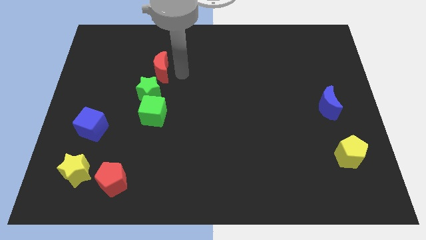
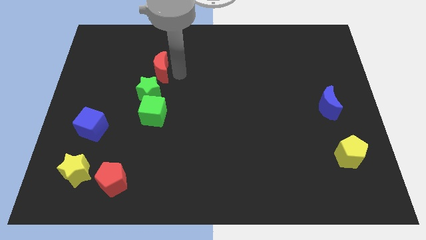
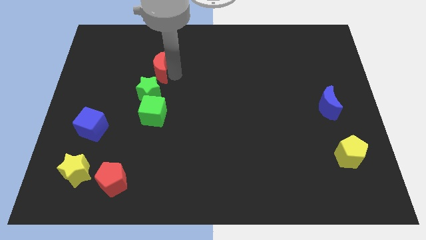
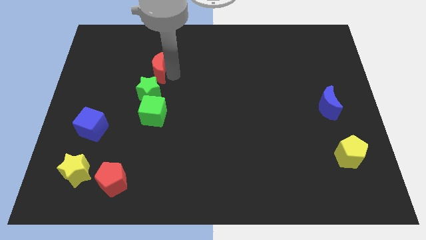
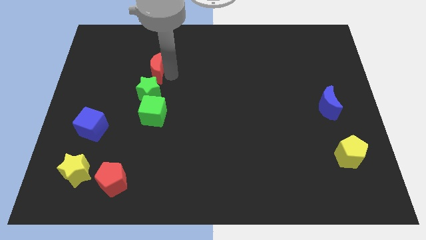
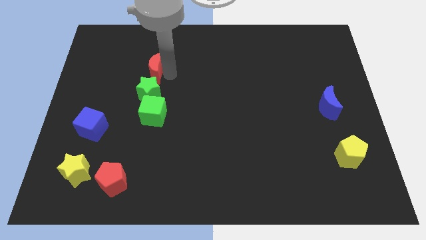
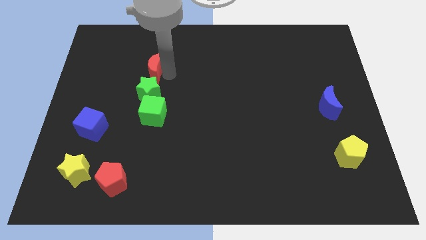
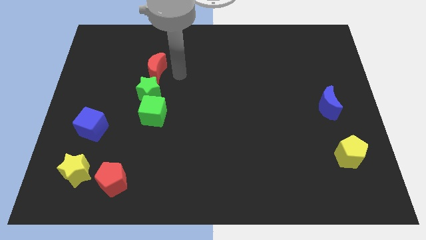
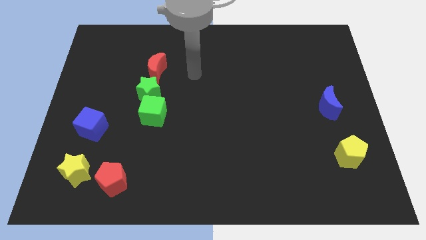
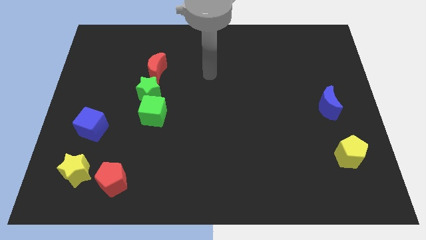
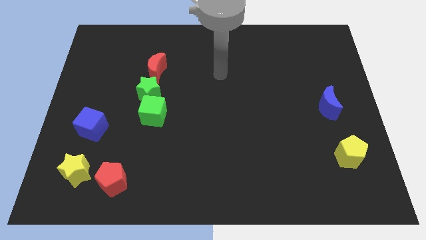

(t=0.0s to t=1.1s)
move red crescent slightly to the top of green star

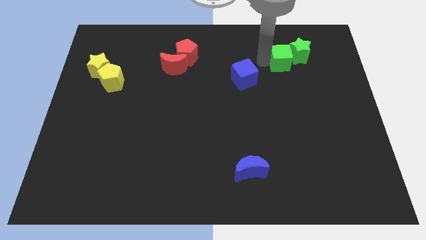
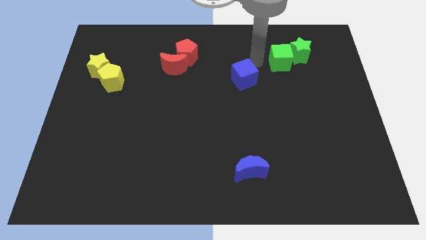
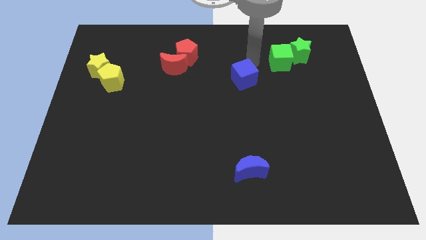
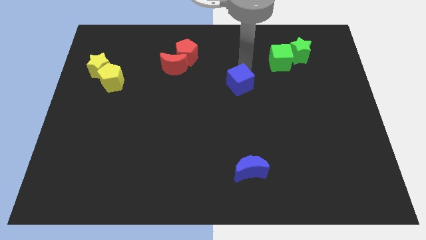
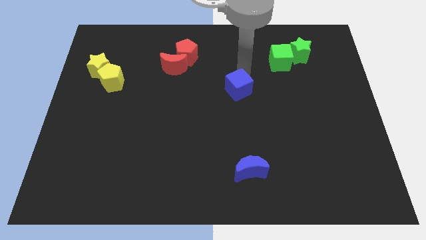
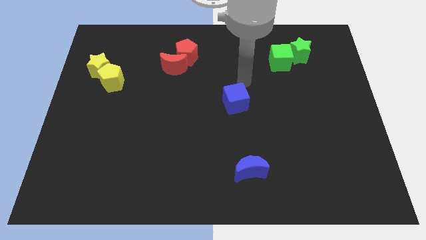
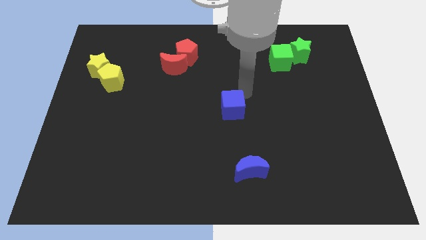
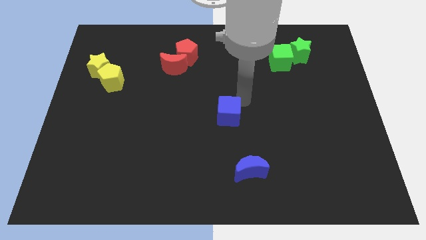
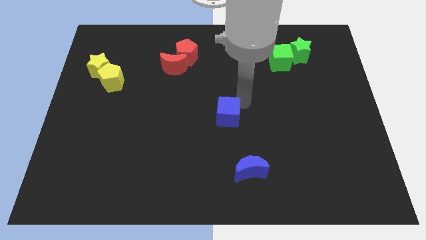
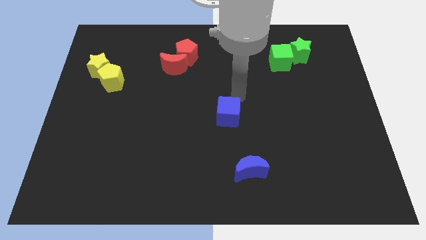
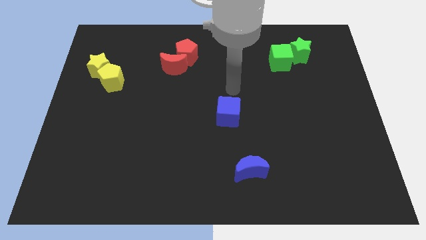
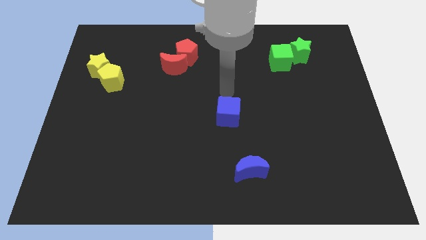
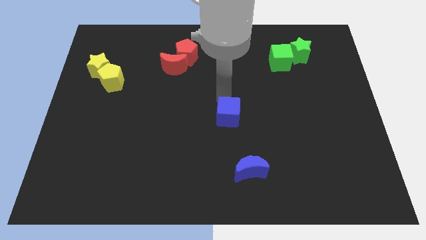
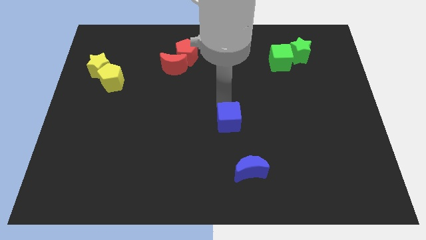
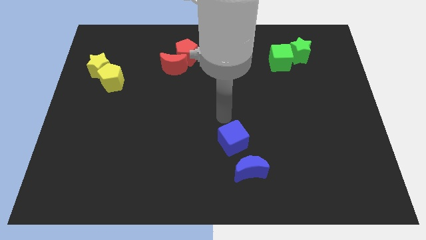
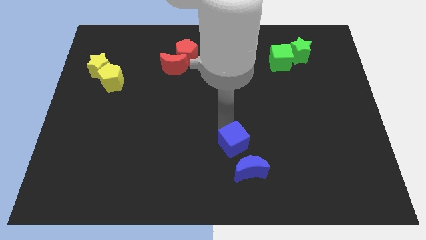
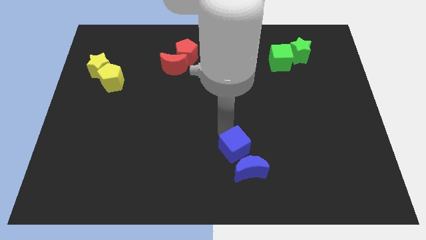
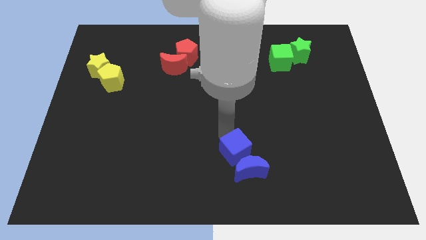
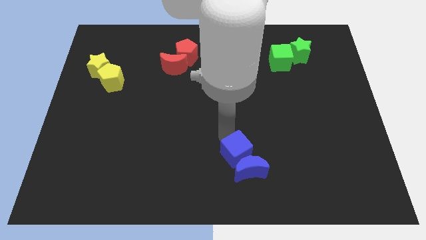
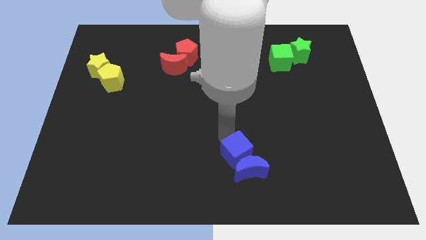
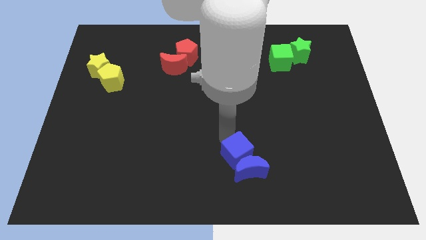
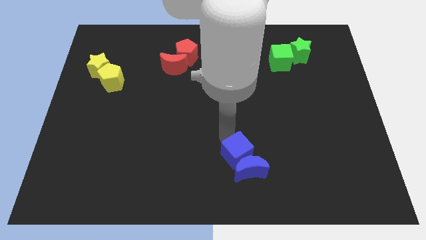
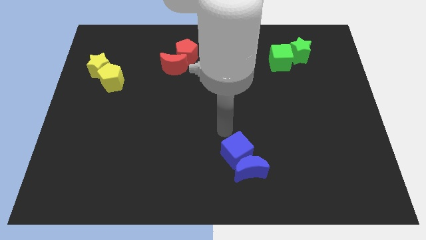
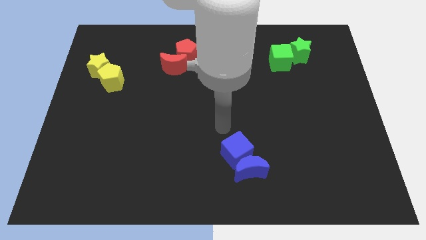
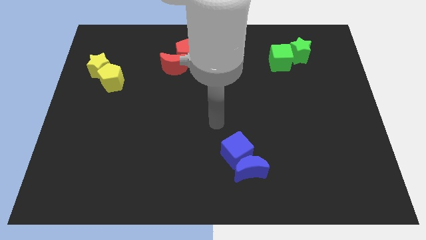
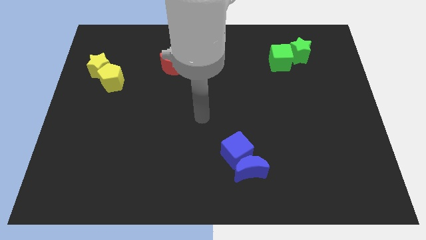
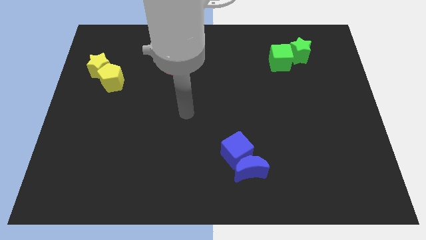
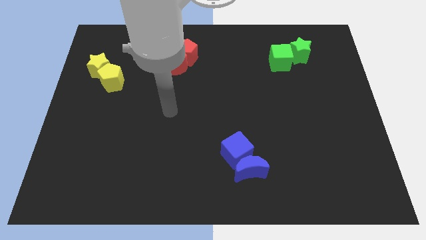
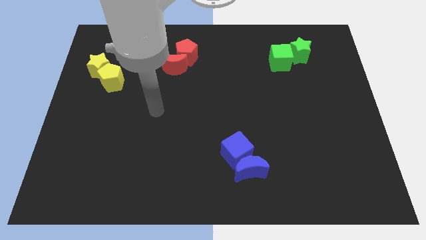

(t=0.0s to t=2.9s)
move the blue cube above the blue moon

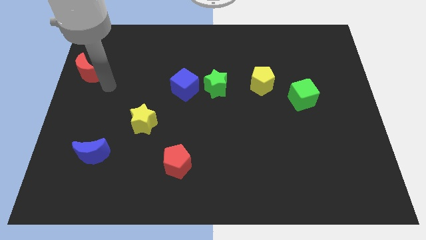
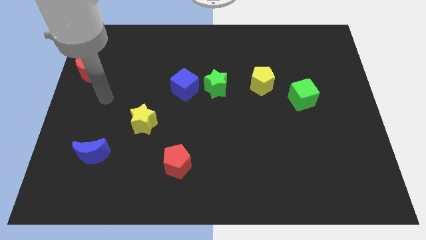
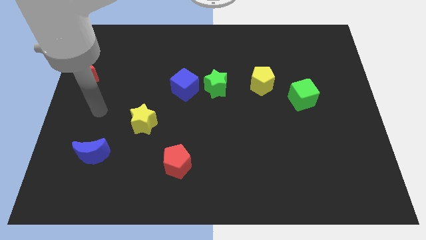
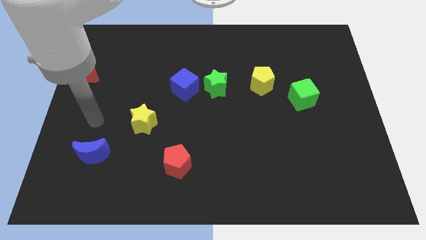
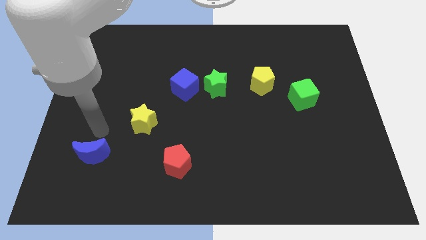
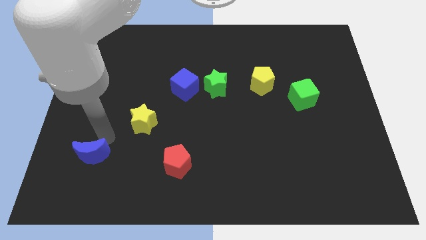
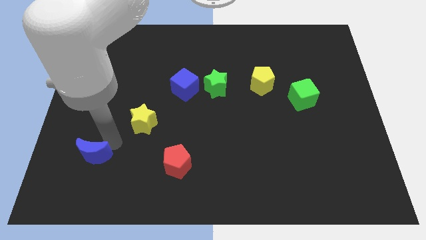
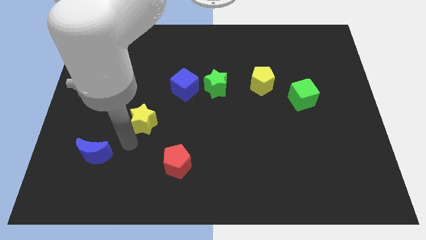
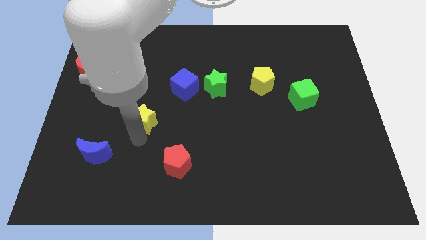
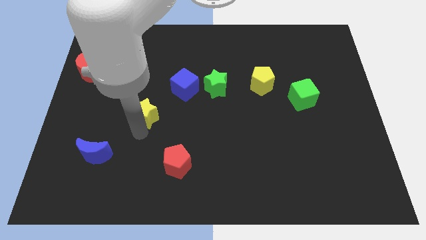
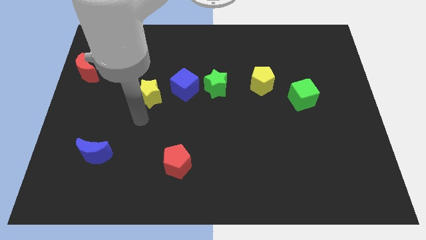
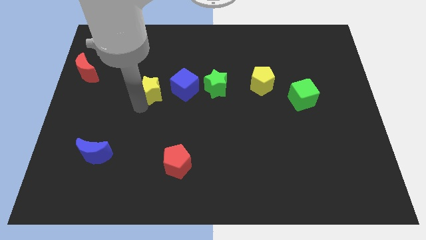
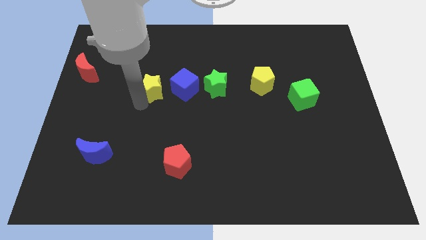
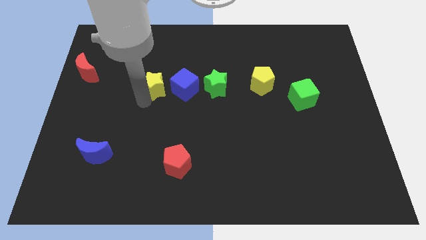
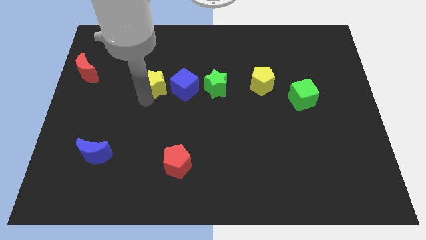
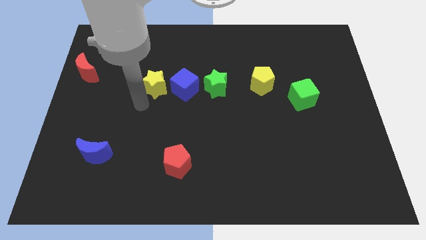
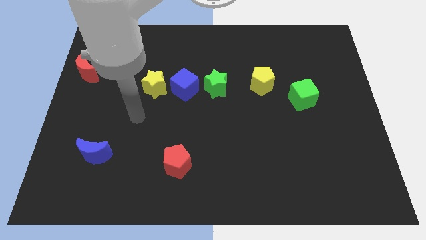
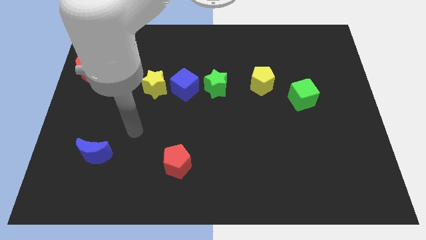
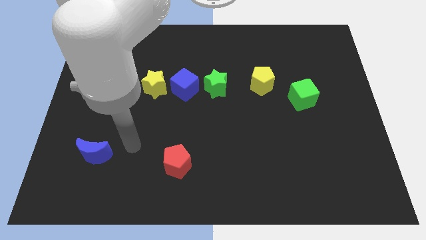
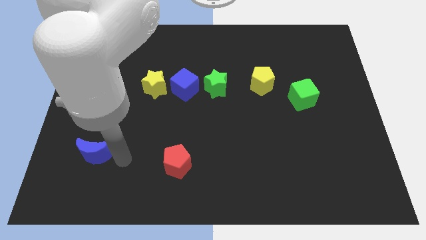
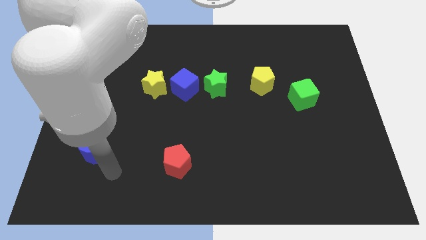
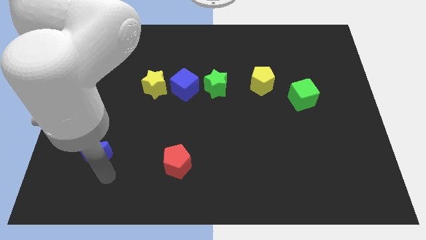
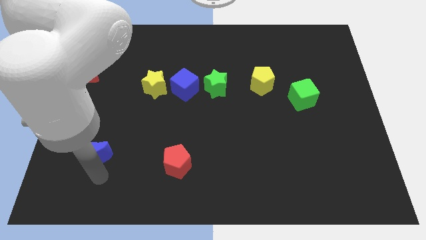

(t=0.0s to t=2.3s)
move the yellow star to the left of blue cube

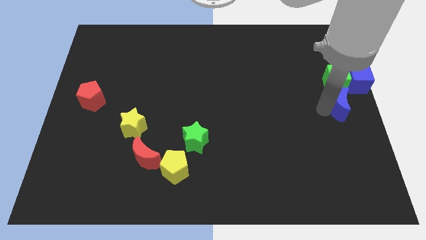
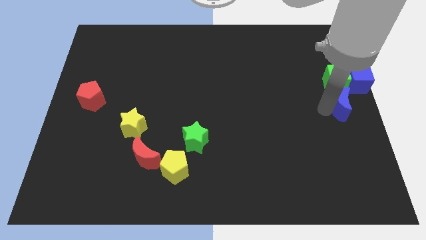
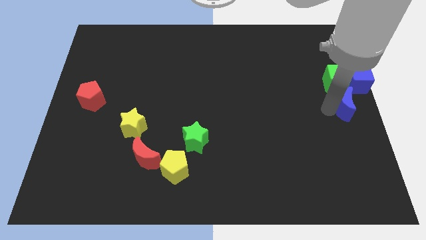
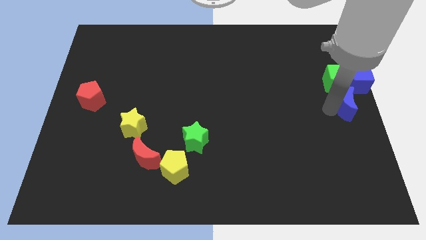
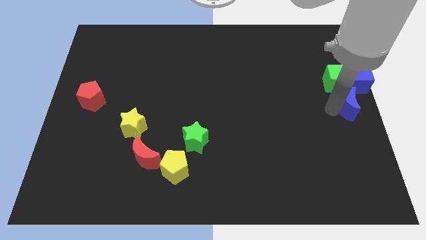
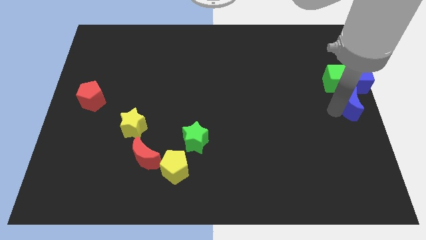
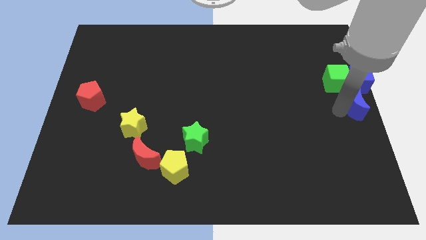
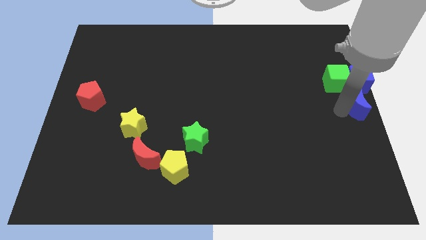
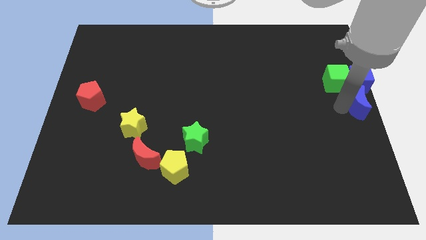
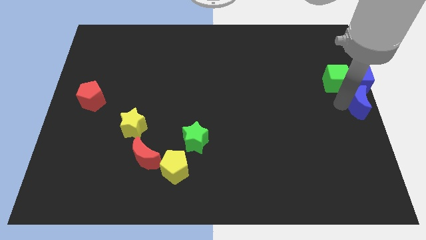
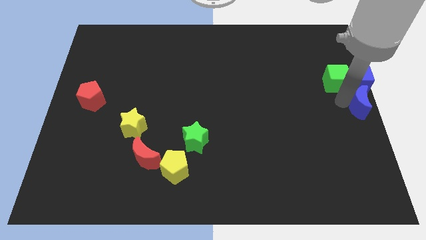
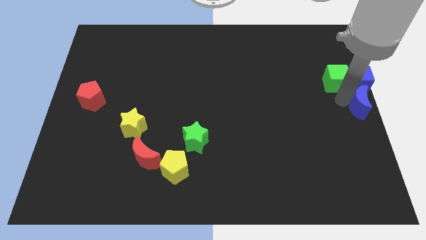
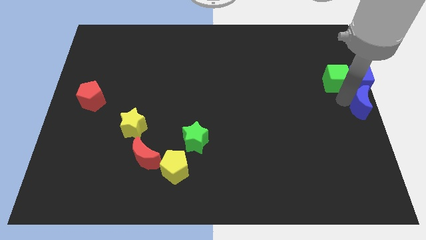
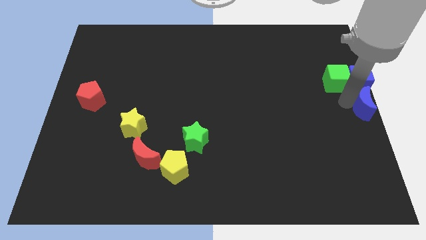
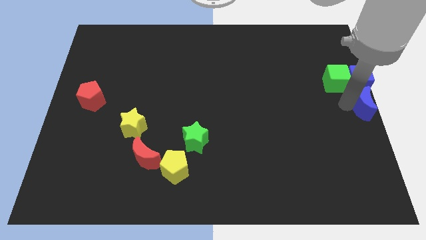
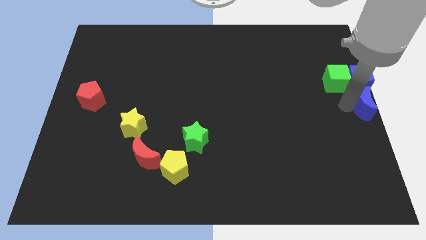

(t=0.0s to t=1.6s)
push the blue crescent to the bottom of the blue cube

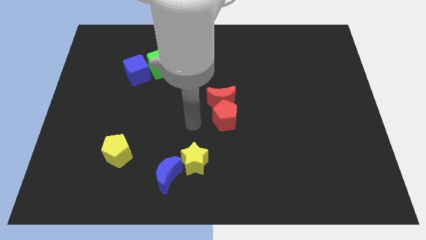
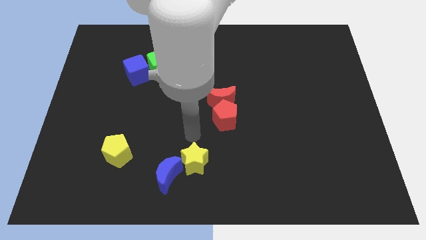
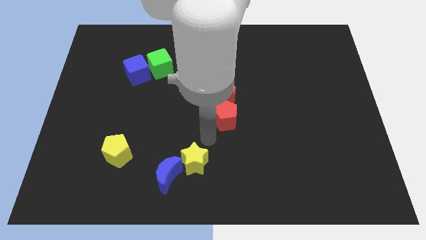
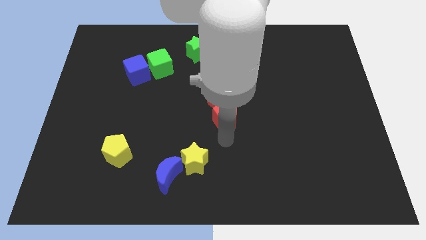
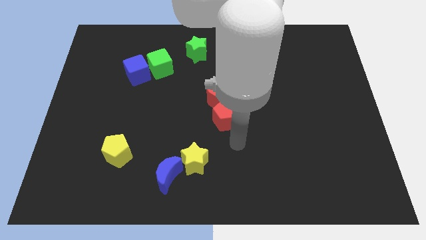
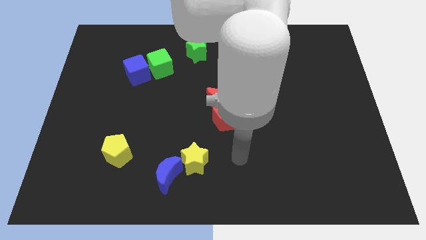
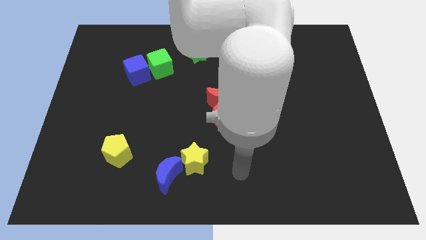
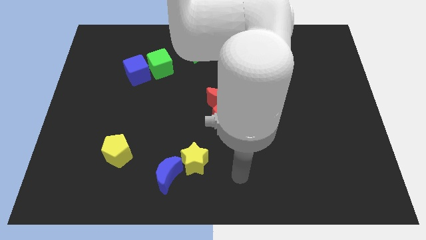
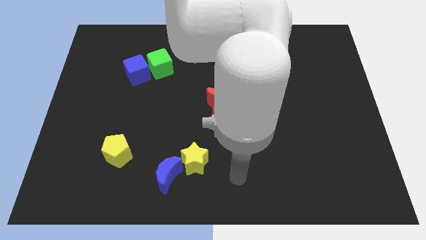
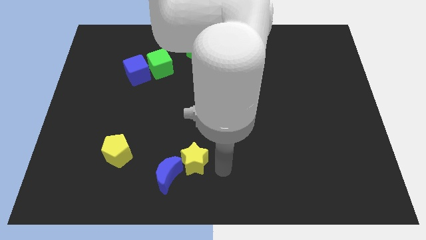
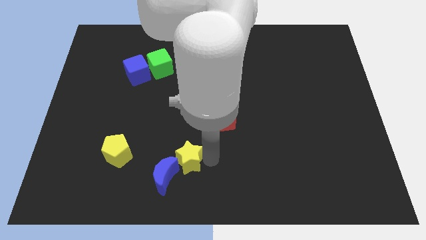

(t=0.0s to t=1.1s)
place the arm right to the yellow star
